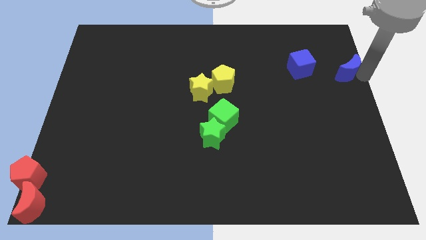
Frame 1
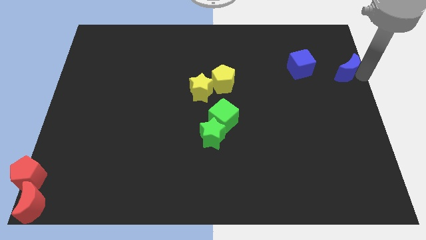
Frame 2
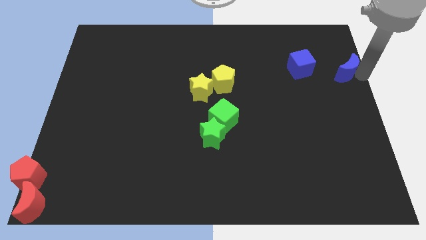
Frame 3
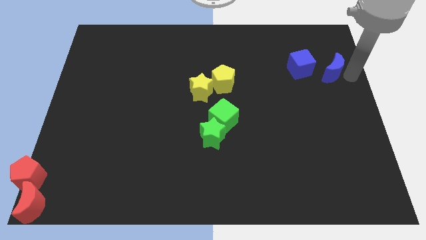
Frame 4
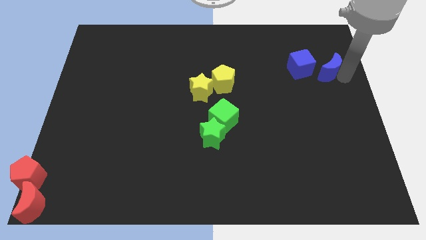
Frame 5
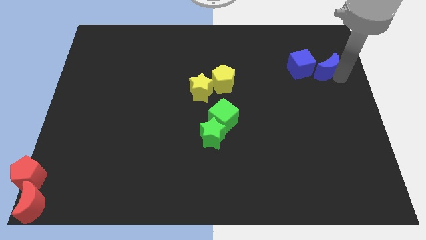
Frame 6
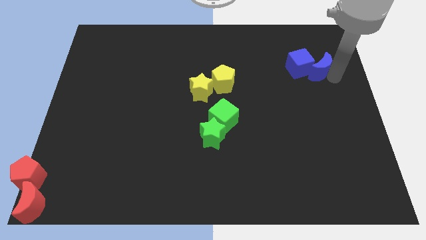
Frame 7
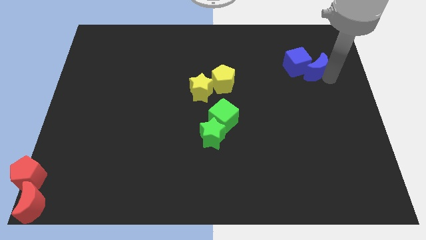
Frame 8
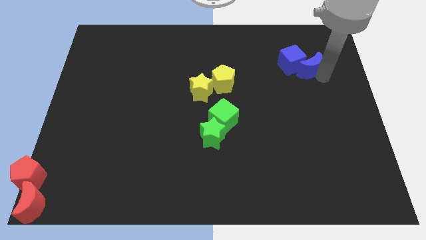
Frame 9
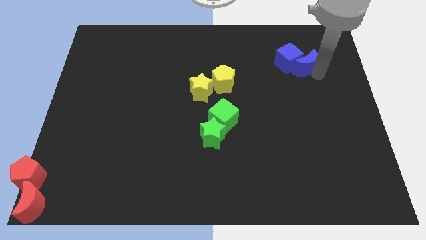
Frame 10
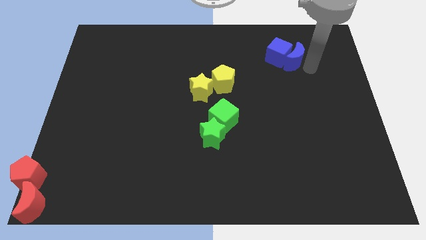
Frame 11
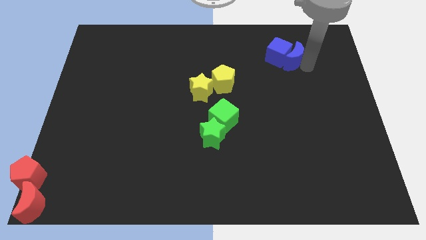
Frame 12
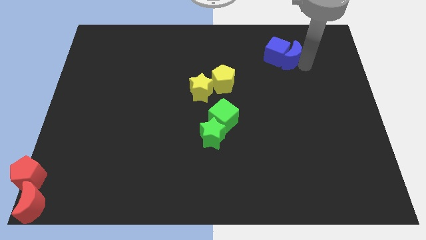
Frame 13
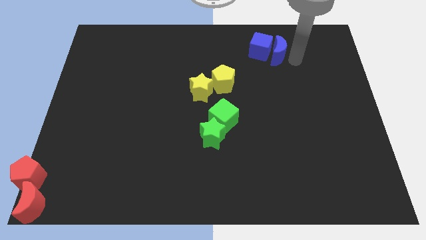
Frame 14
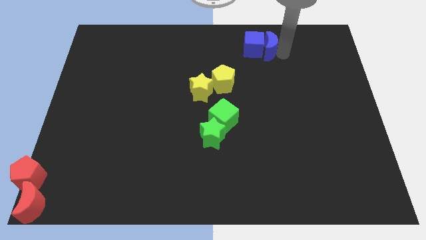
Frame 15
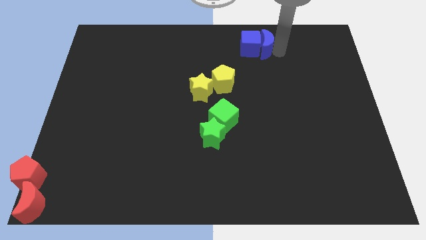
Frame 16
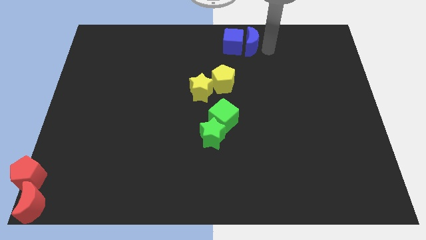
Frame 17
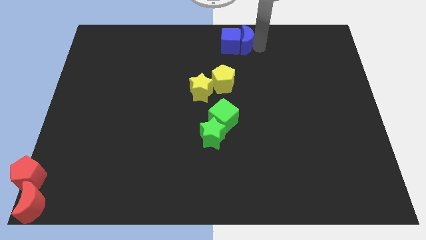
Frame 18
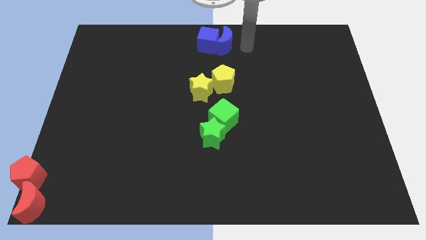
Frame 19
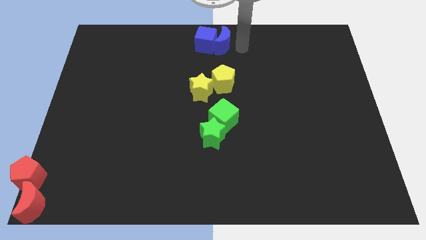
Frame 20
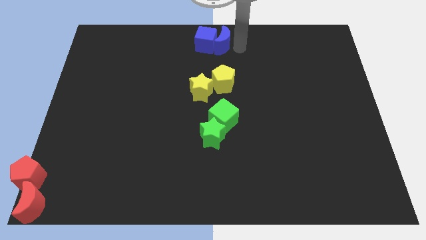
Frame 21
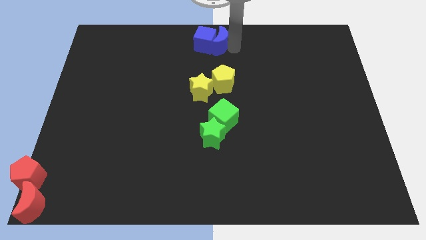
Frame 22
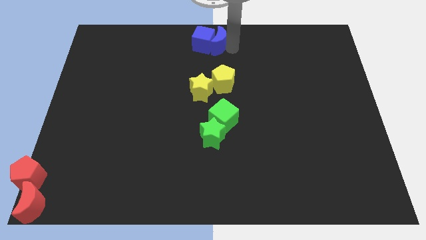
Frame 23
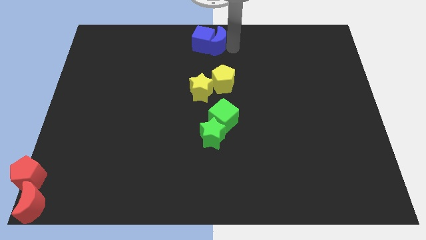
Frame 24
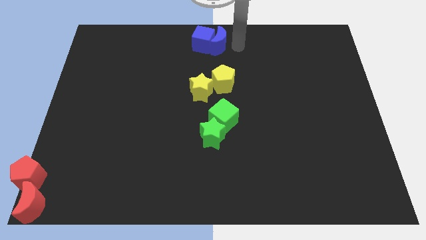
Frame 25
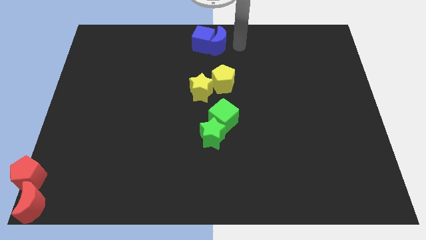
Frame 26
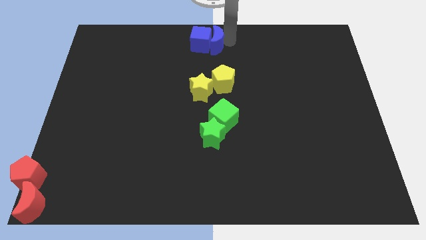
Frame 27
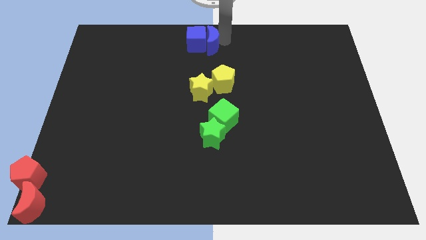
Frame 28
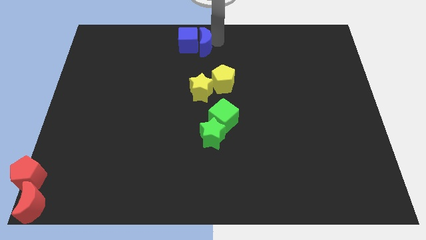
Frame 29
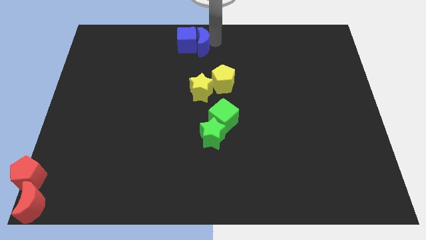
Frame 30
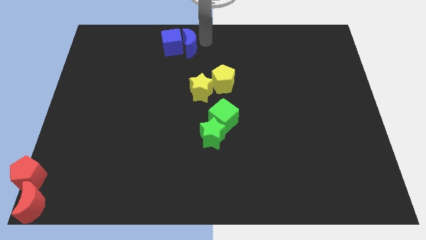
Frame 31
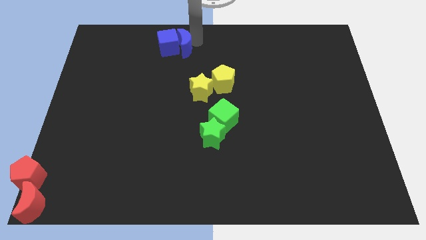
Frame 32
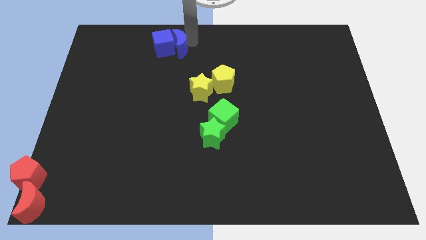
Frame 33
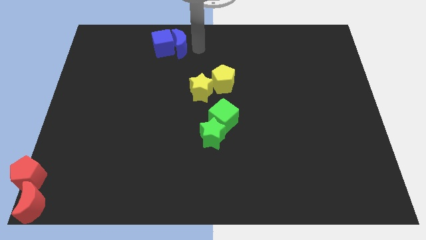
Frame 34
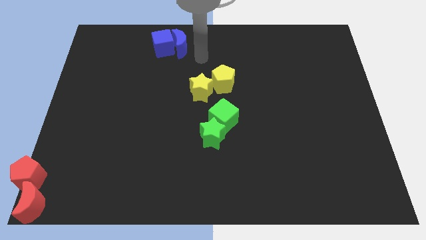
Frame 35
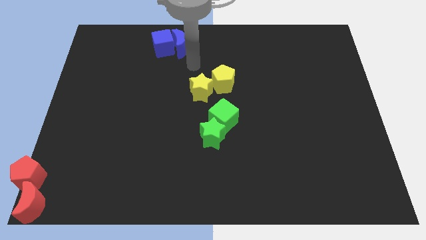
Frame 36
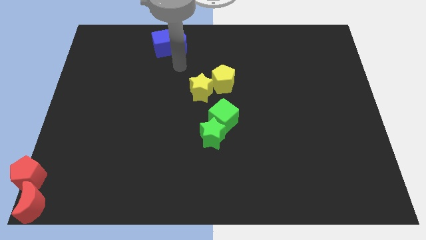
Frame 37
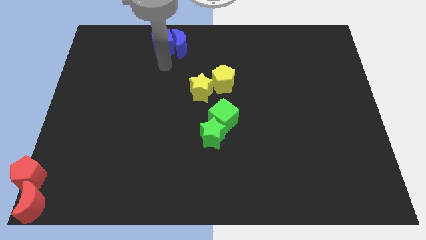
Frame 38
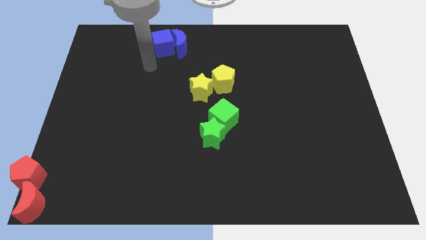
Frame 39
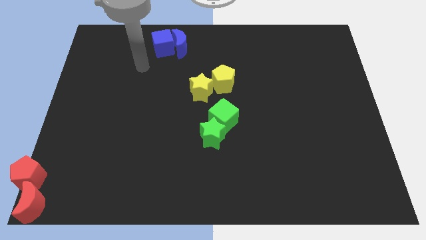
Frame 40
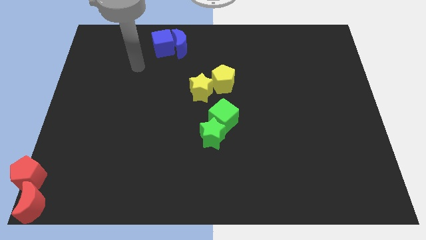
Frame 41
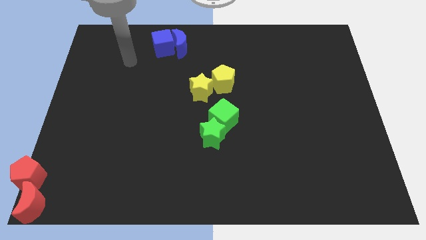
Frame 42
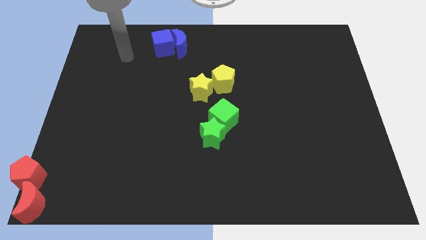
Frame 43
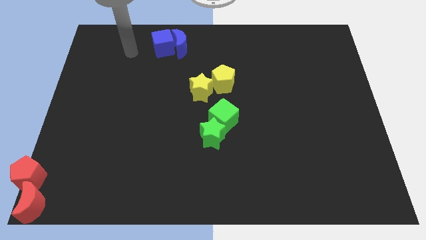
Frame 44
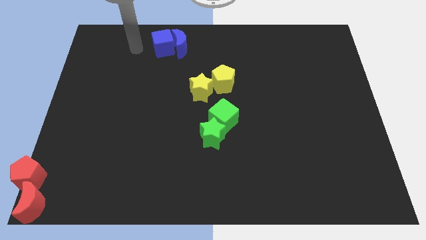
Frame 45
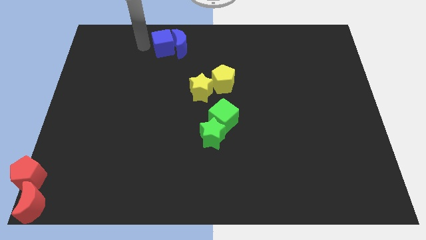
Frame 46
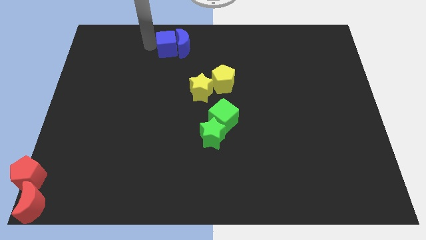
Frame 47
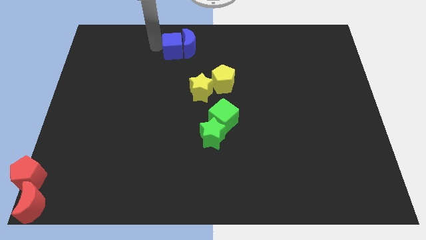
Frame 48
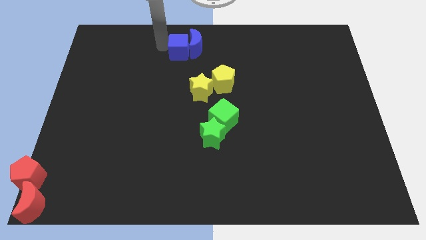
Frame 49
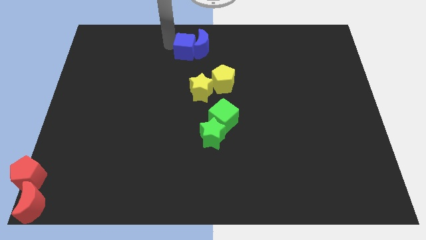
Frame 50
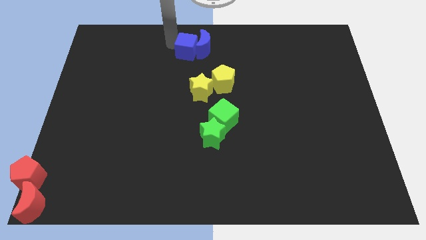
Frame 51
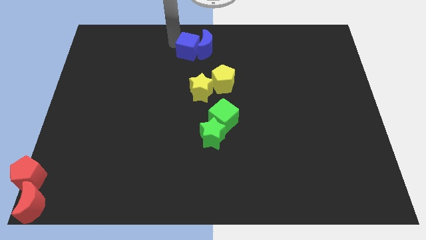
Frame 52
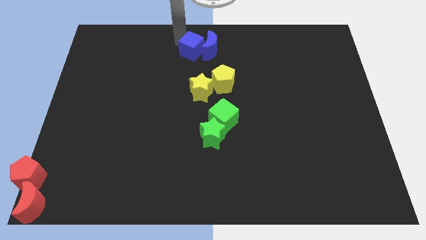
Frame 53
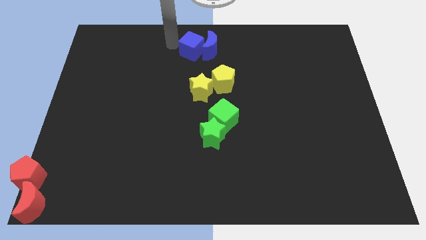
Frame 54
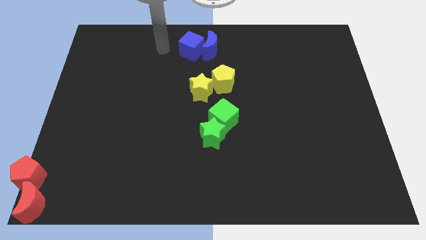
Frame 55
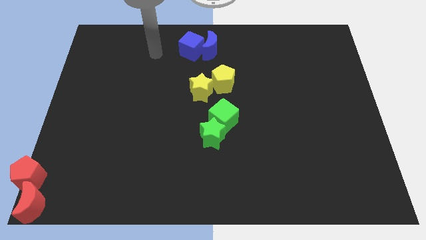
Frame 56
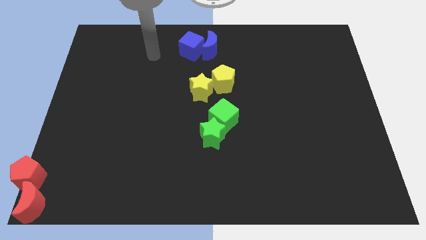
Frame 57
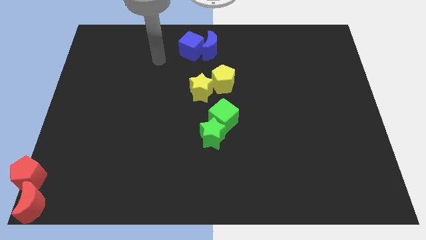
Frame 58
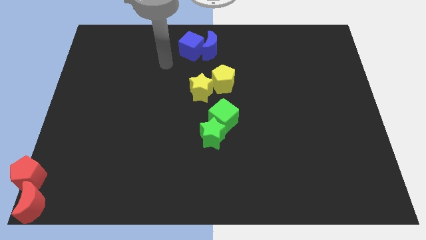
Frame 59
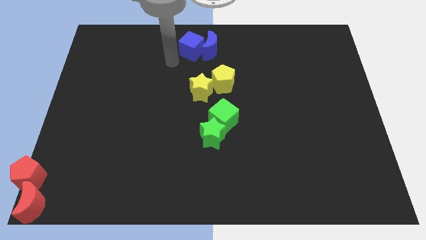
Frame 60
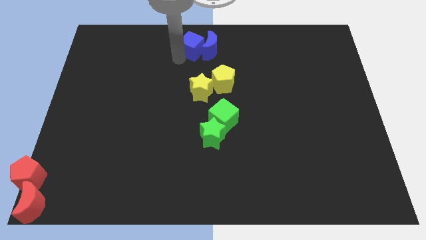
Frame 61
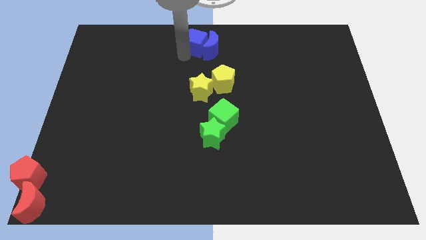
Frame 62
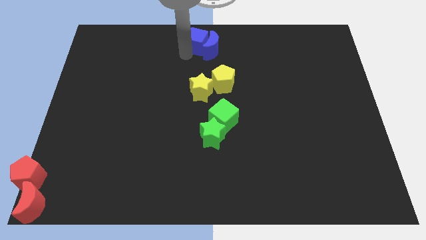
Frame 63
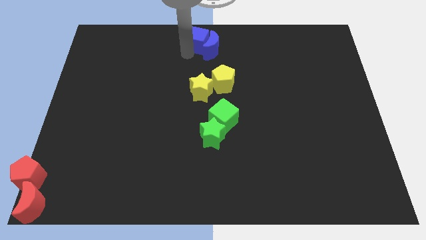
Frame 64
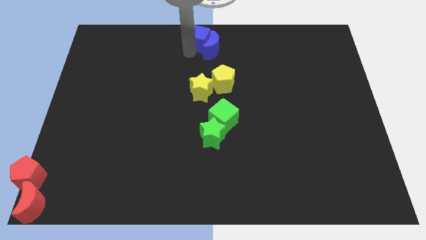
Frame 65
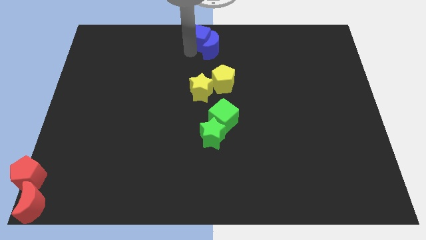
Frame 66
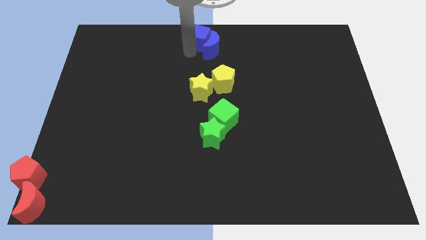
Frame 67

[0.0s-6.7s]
move the blue blocks to the top center of the table

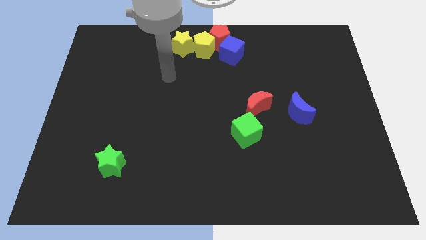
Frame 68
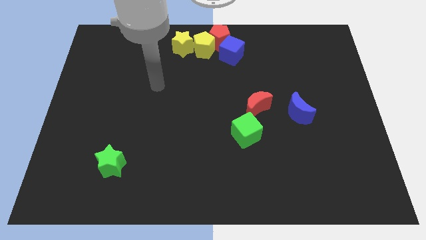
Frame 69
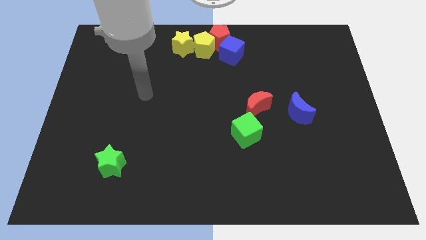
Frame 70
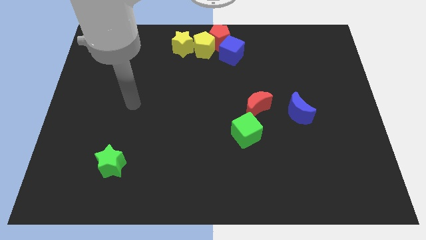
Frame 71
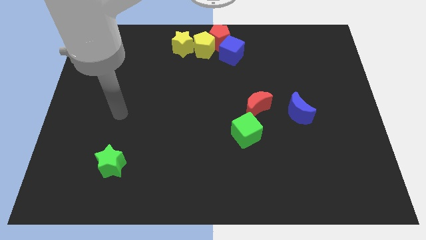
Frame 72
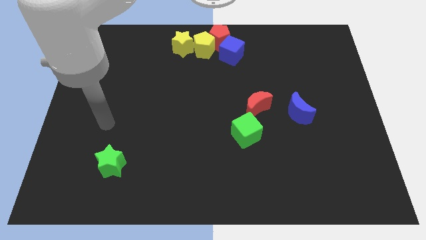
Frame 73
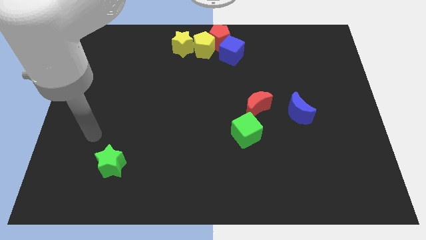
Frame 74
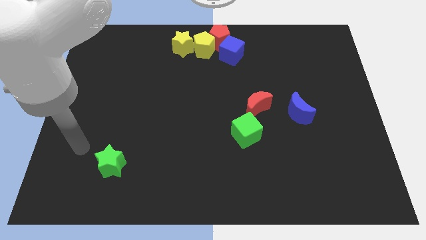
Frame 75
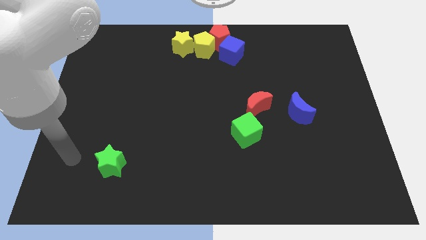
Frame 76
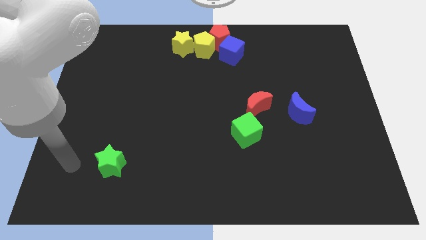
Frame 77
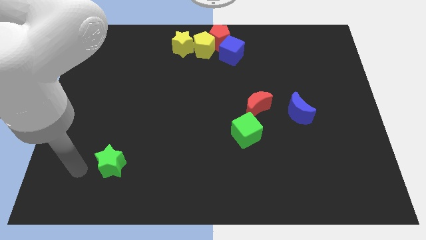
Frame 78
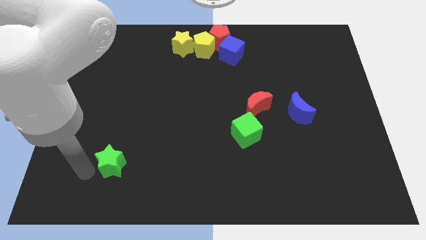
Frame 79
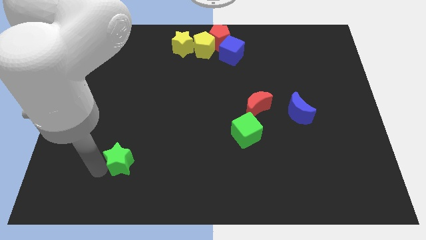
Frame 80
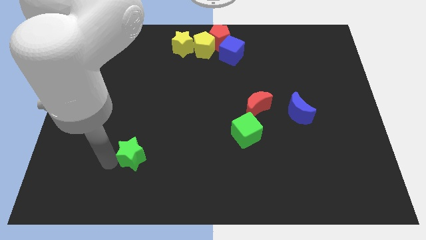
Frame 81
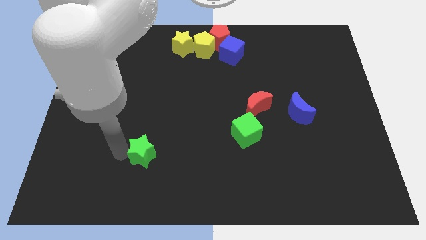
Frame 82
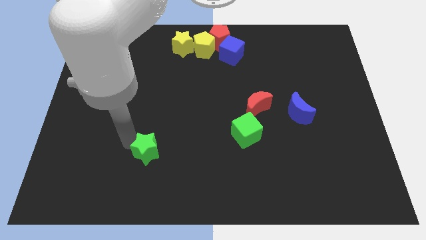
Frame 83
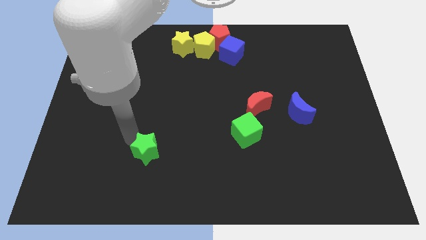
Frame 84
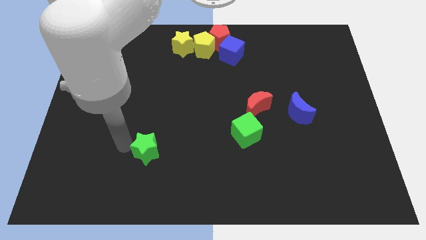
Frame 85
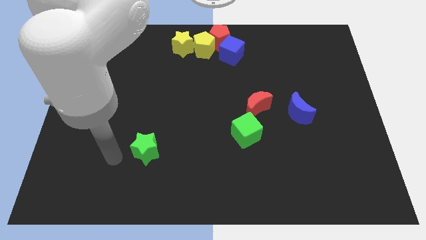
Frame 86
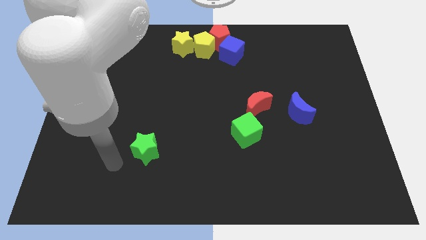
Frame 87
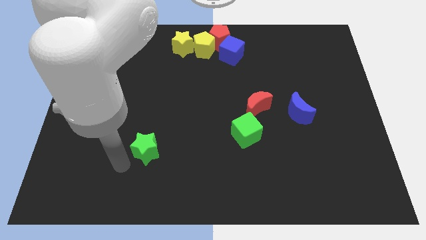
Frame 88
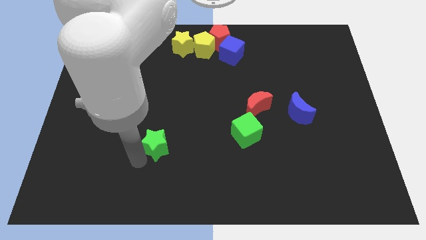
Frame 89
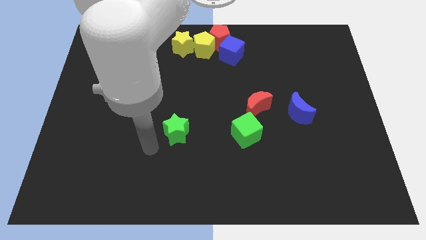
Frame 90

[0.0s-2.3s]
slide the green star to the left side of the green cube
